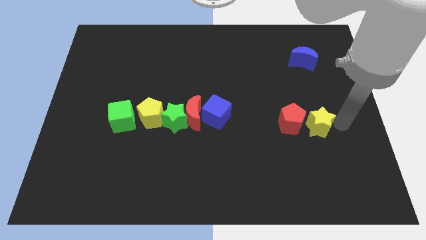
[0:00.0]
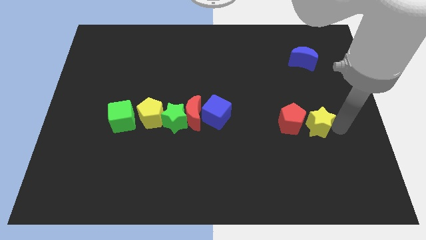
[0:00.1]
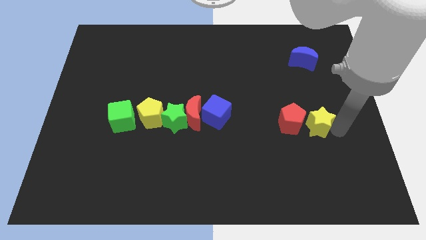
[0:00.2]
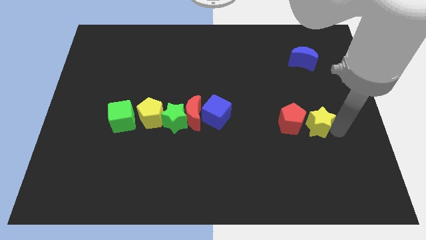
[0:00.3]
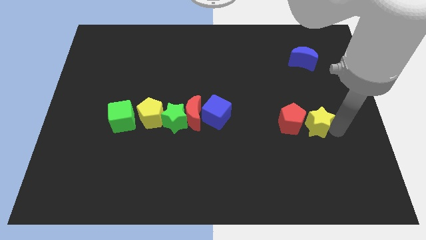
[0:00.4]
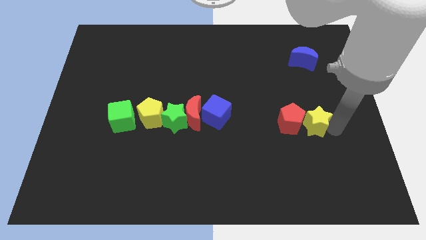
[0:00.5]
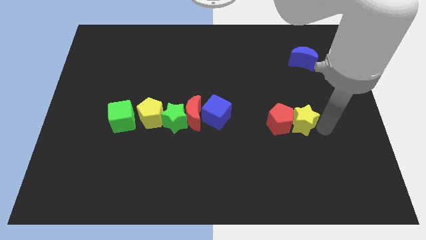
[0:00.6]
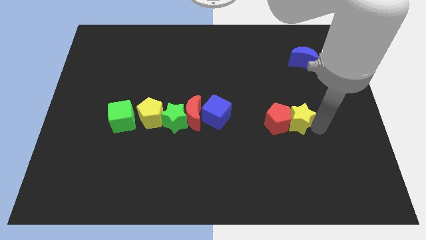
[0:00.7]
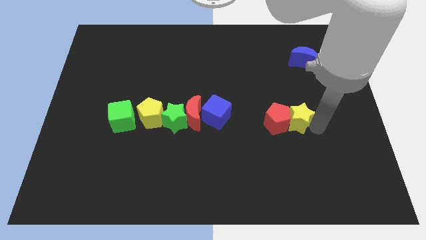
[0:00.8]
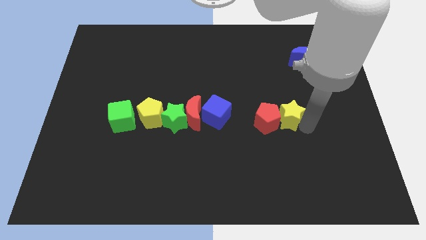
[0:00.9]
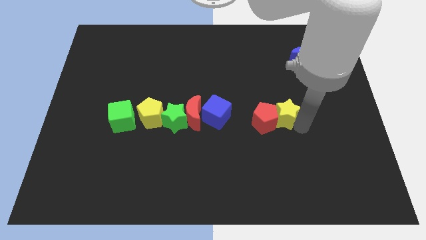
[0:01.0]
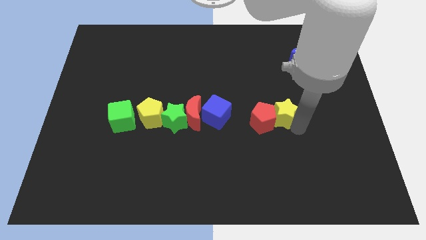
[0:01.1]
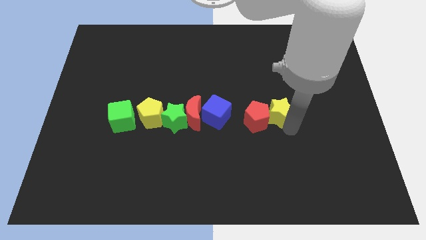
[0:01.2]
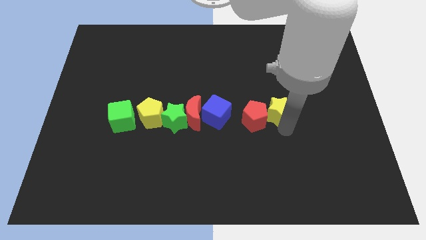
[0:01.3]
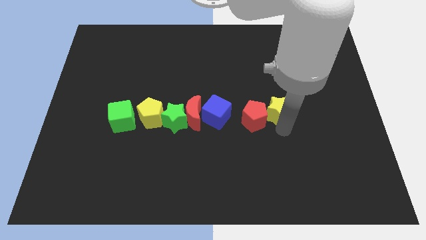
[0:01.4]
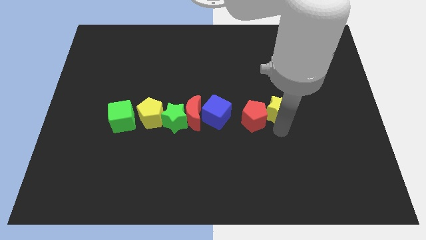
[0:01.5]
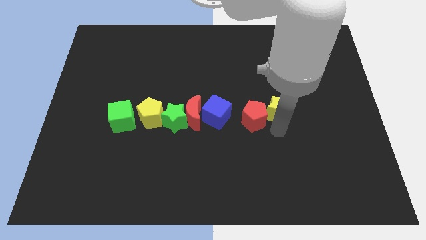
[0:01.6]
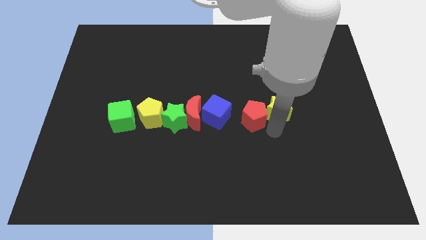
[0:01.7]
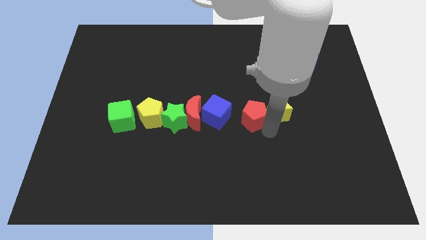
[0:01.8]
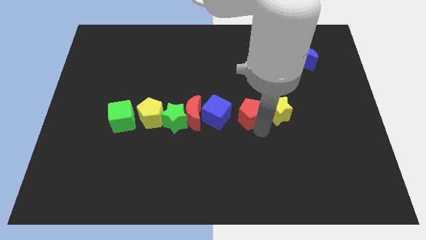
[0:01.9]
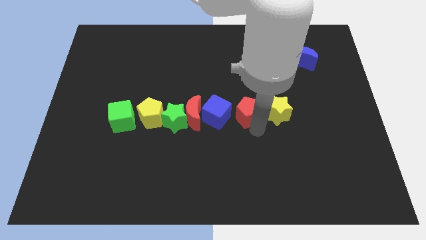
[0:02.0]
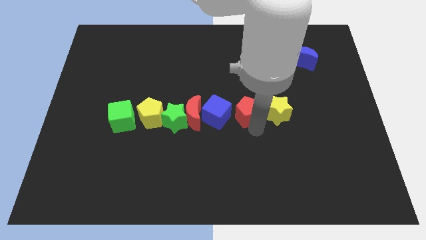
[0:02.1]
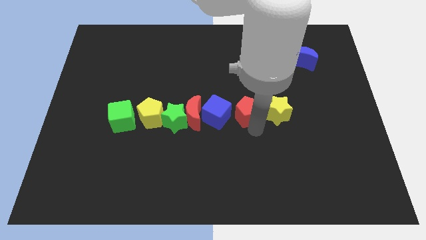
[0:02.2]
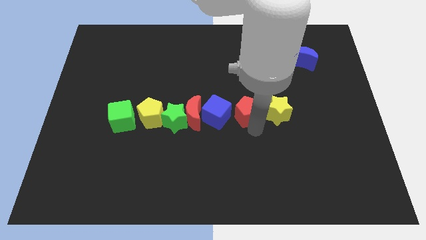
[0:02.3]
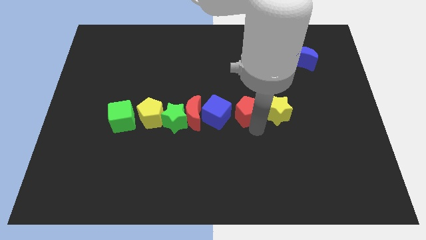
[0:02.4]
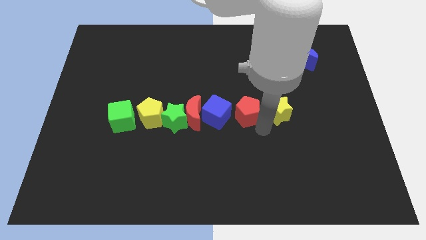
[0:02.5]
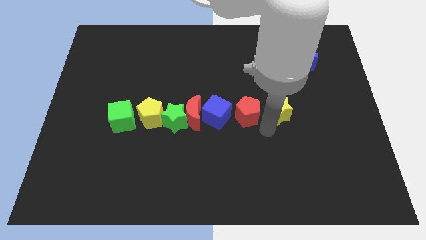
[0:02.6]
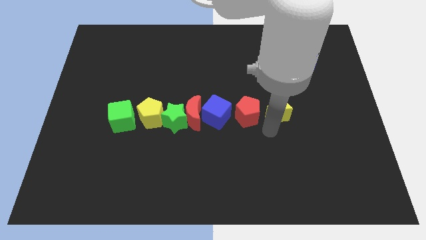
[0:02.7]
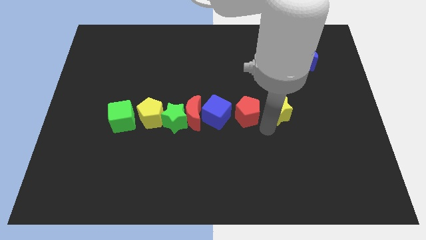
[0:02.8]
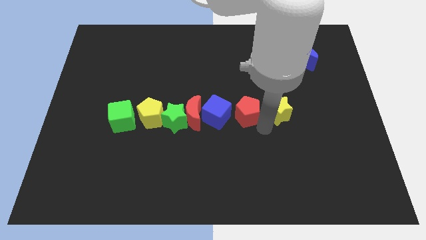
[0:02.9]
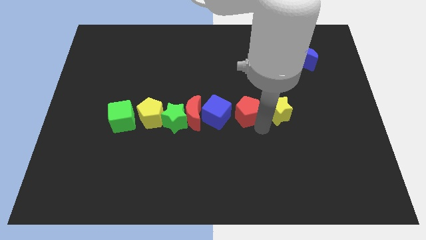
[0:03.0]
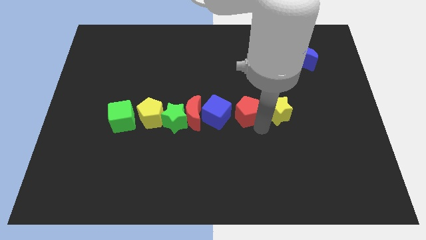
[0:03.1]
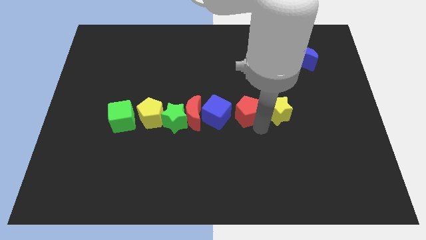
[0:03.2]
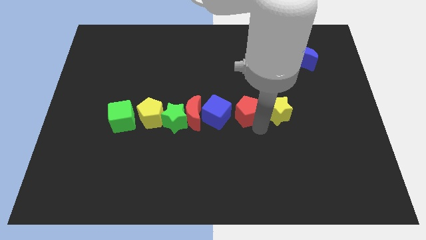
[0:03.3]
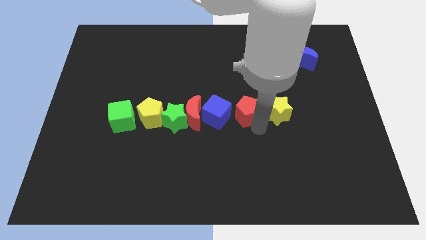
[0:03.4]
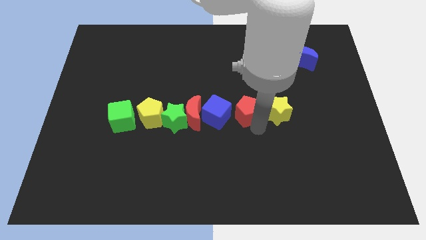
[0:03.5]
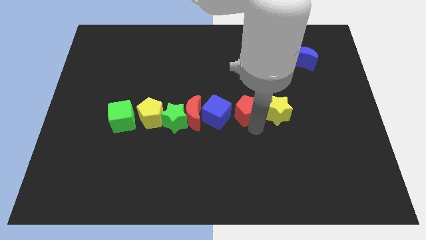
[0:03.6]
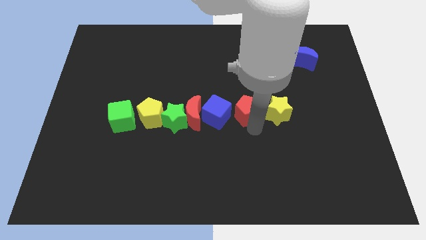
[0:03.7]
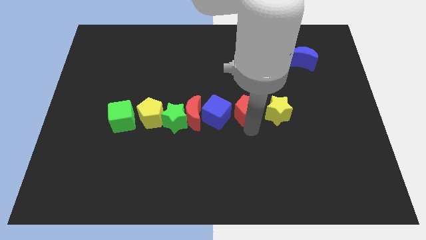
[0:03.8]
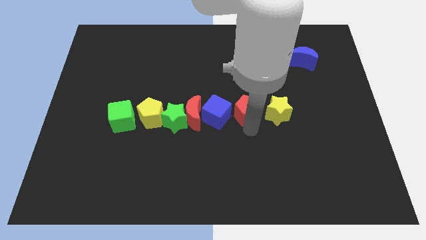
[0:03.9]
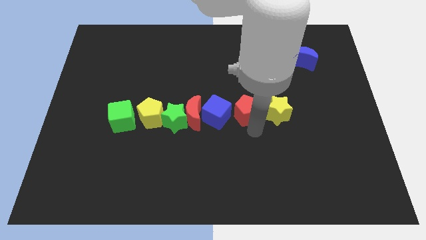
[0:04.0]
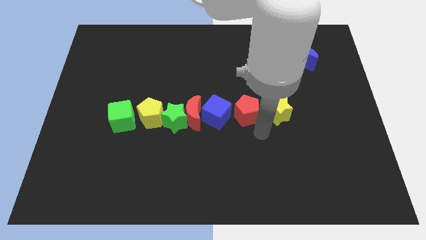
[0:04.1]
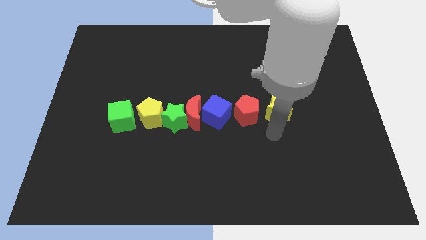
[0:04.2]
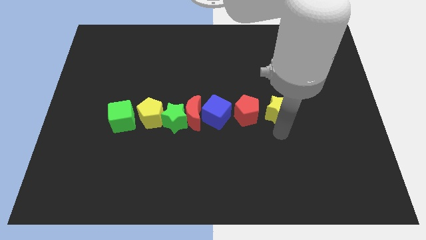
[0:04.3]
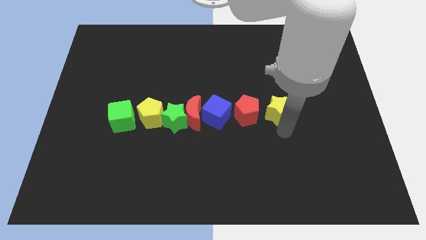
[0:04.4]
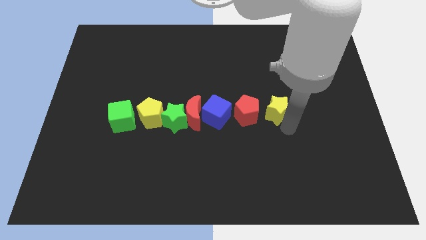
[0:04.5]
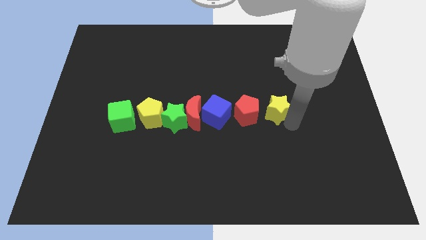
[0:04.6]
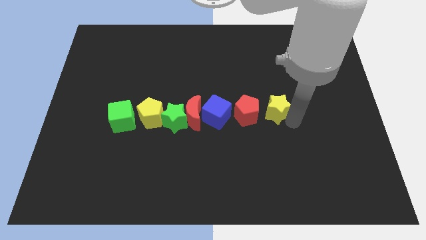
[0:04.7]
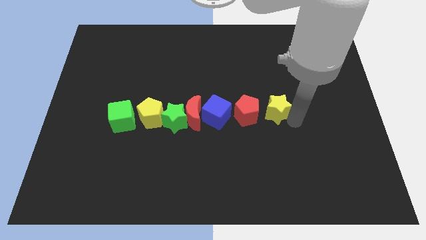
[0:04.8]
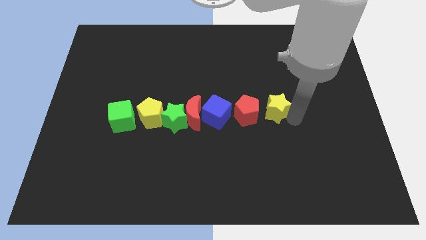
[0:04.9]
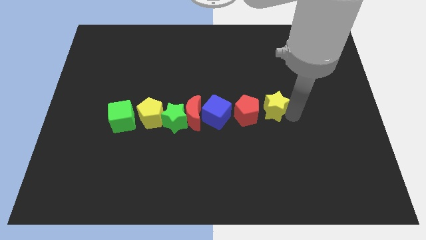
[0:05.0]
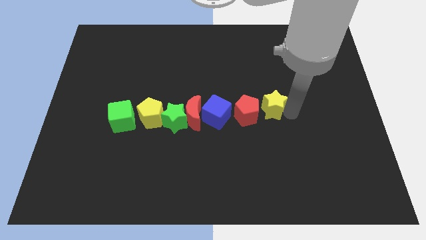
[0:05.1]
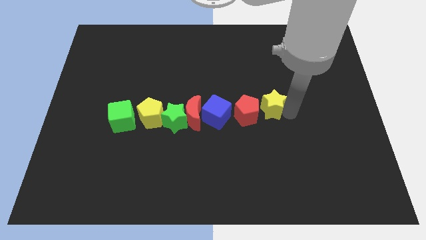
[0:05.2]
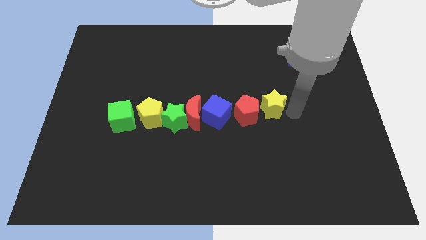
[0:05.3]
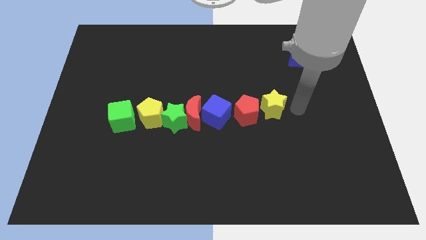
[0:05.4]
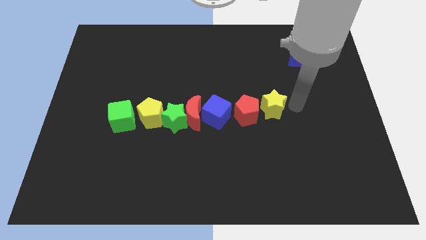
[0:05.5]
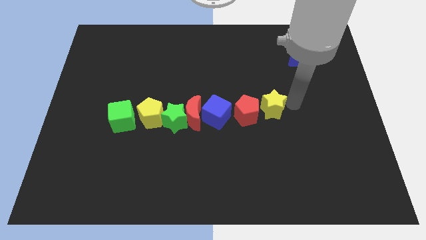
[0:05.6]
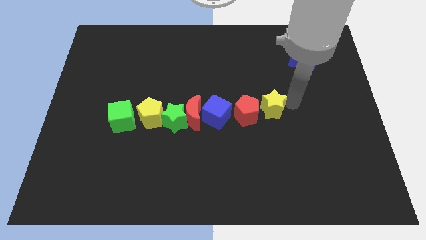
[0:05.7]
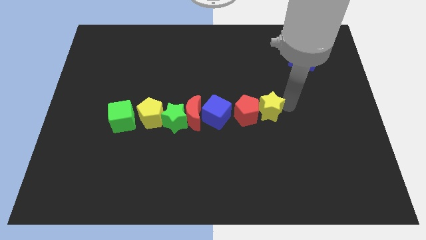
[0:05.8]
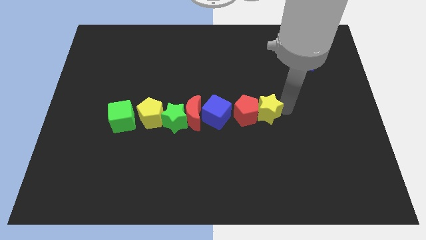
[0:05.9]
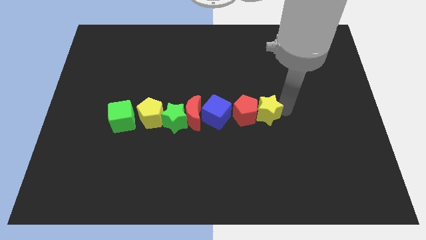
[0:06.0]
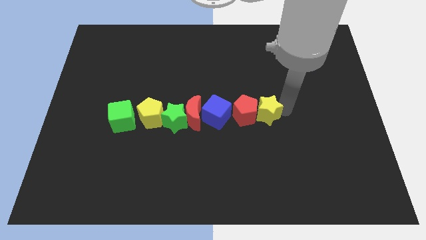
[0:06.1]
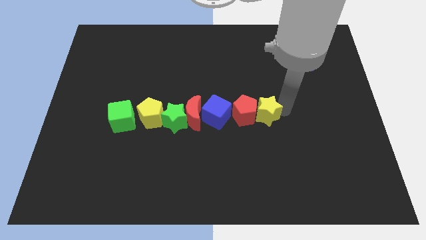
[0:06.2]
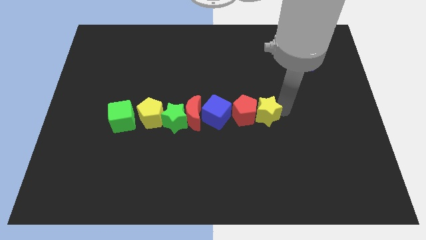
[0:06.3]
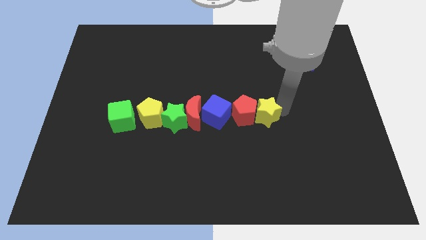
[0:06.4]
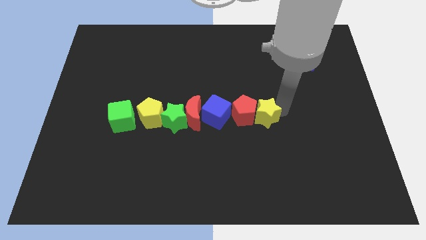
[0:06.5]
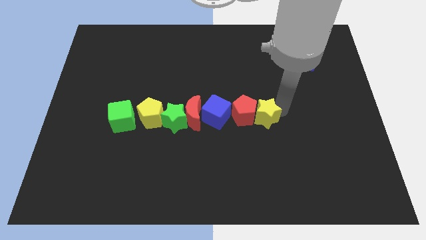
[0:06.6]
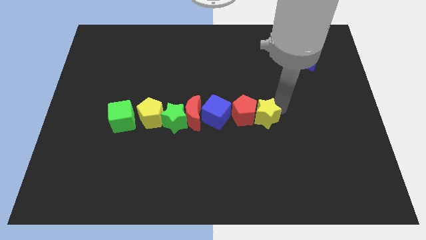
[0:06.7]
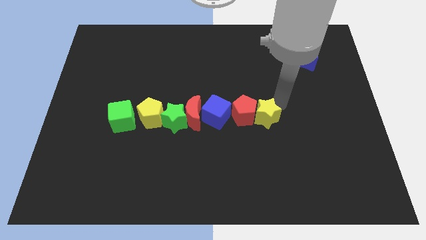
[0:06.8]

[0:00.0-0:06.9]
place the red pentagon and yellow star to the right side of the blue cube

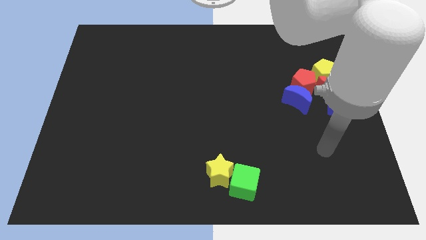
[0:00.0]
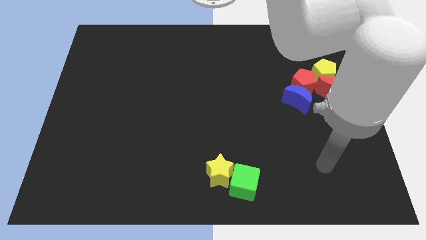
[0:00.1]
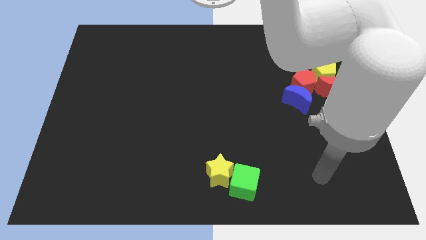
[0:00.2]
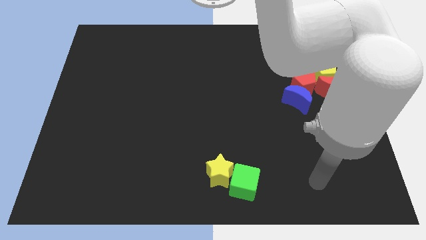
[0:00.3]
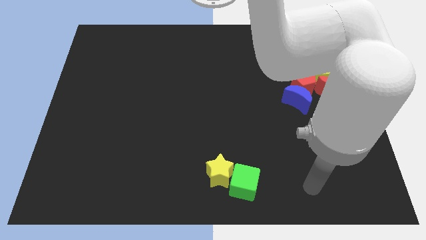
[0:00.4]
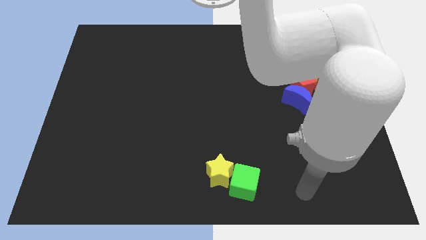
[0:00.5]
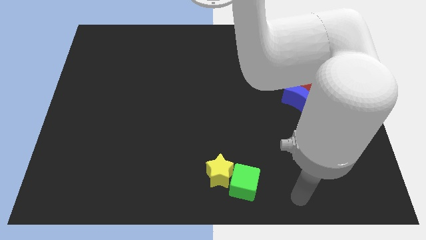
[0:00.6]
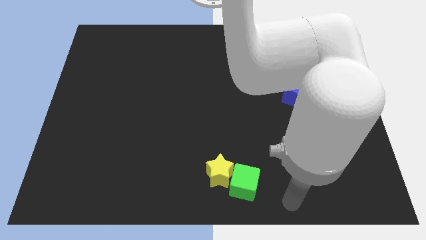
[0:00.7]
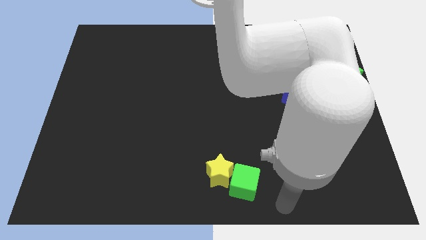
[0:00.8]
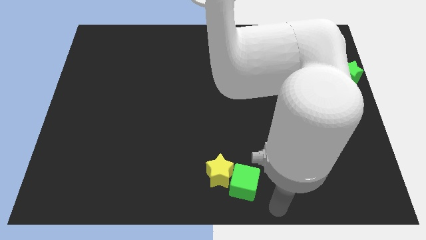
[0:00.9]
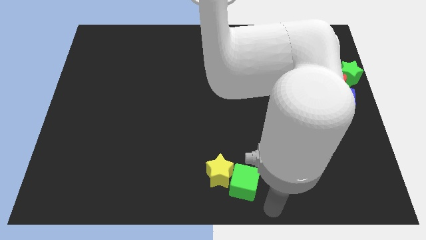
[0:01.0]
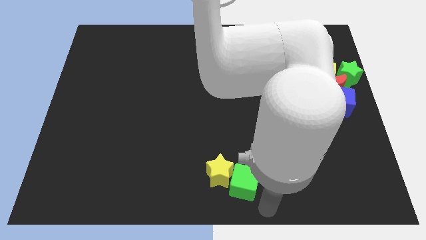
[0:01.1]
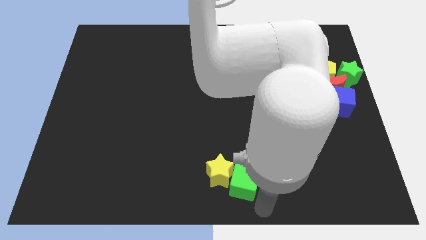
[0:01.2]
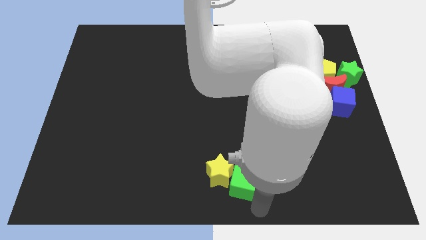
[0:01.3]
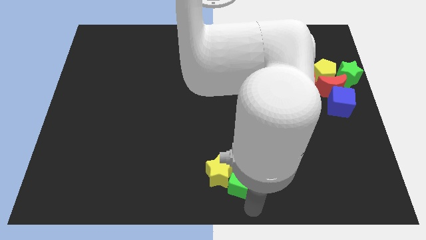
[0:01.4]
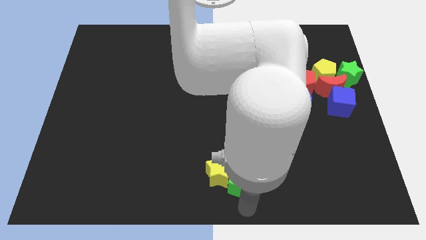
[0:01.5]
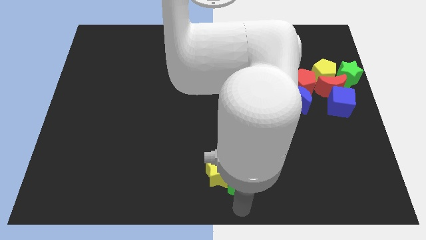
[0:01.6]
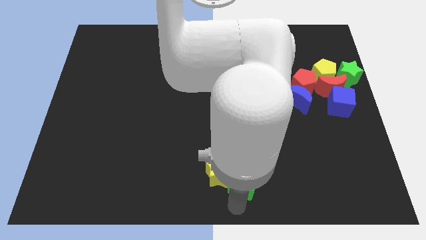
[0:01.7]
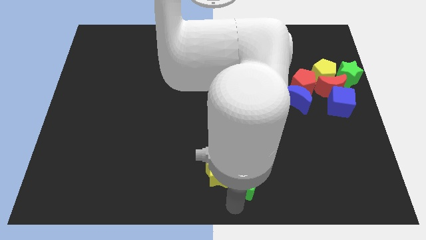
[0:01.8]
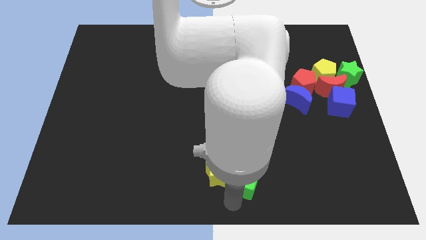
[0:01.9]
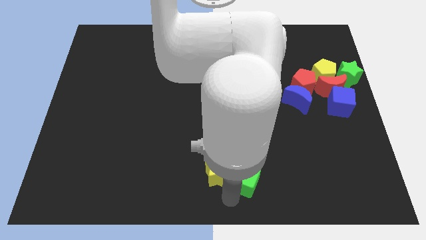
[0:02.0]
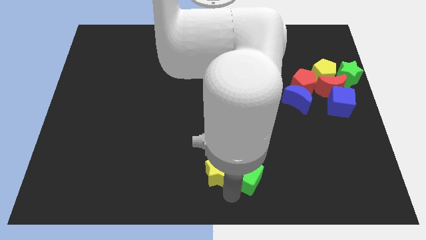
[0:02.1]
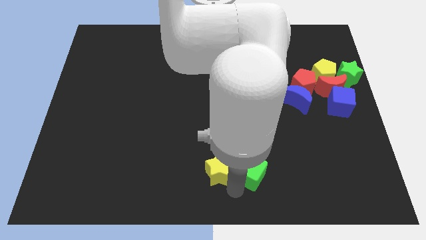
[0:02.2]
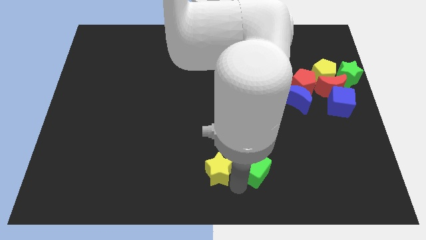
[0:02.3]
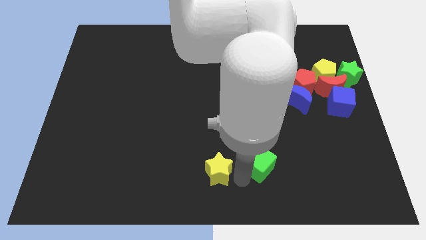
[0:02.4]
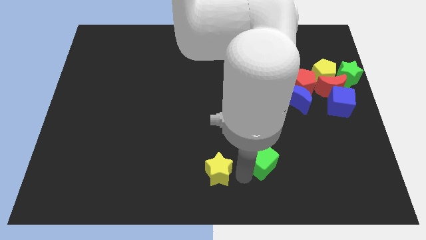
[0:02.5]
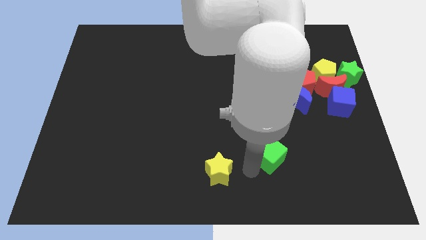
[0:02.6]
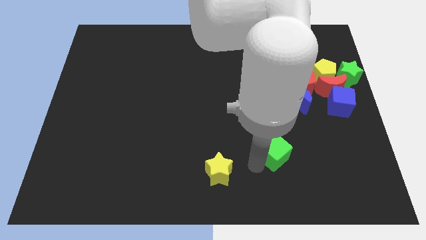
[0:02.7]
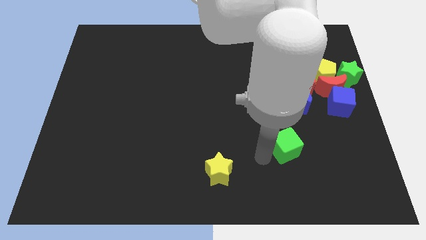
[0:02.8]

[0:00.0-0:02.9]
separate the green cube and yellow star
